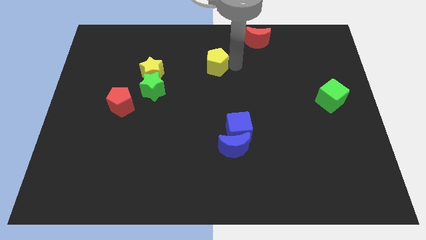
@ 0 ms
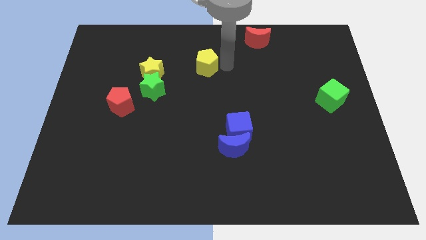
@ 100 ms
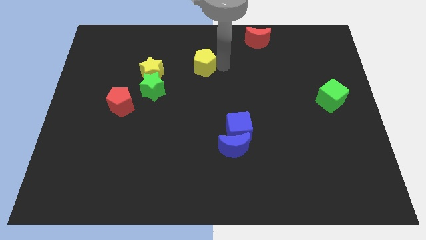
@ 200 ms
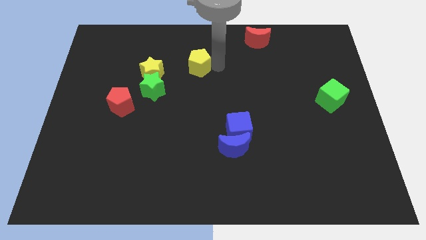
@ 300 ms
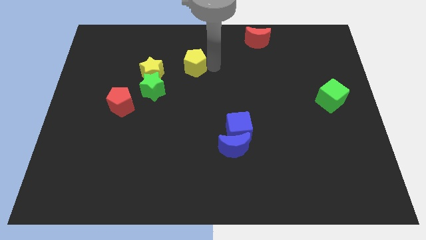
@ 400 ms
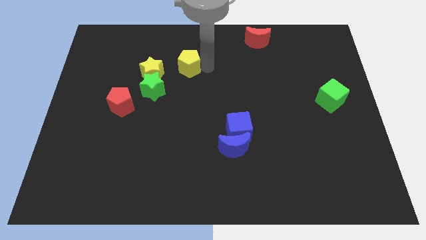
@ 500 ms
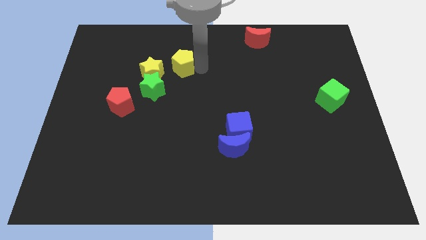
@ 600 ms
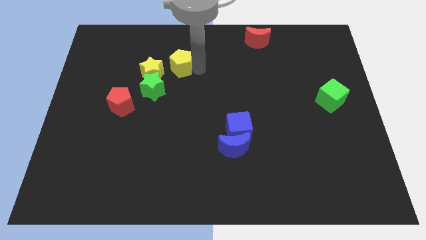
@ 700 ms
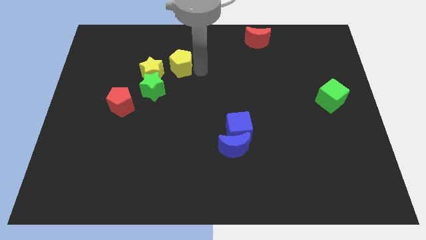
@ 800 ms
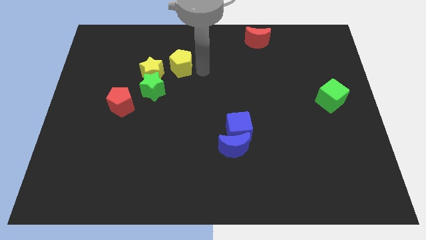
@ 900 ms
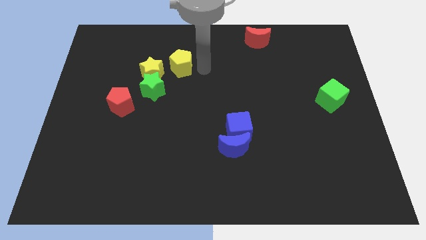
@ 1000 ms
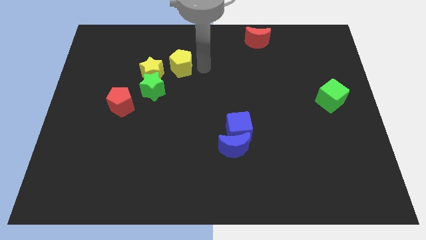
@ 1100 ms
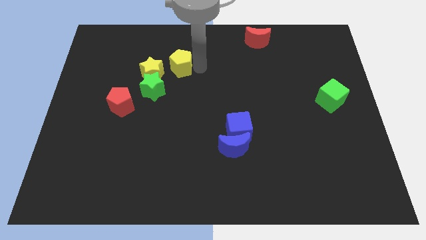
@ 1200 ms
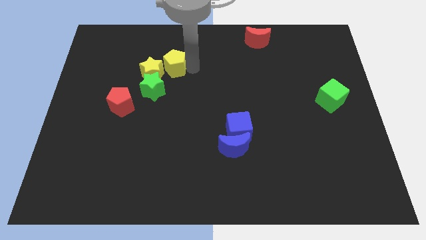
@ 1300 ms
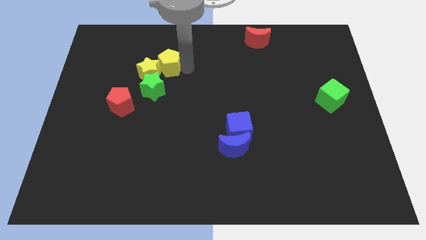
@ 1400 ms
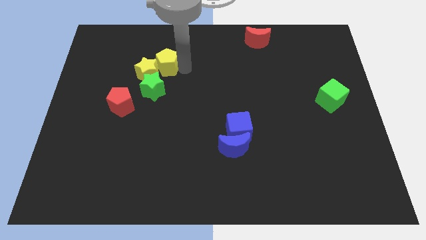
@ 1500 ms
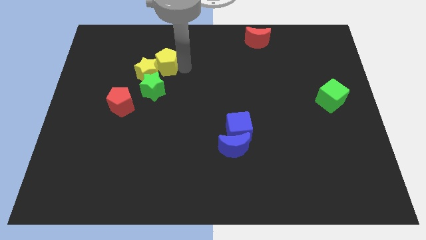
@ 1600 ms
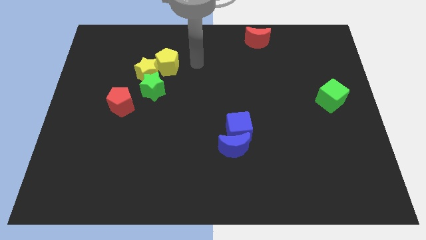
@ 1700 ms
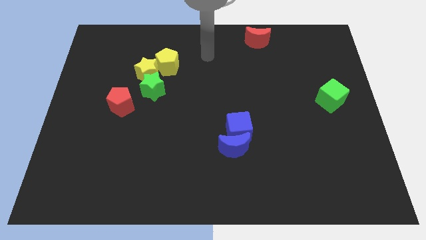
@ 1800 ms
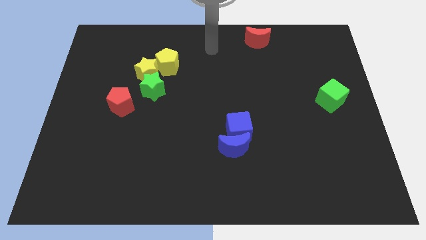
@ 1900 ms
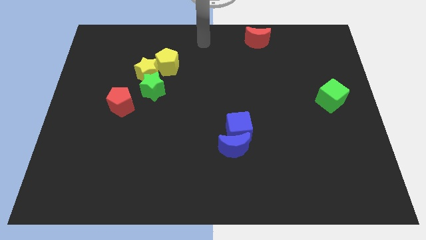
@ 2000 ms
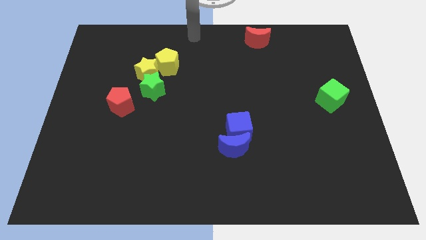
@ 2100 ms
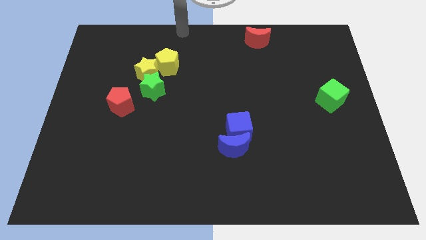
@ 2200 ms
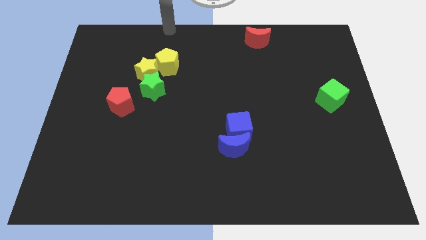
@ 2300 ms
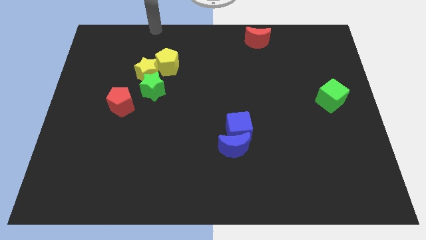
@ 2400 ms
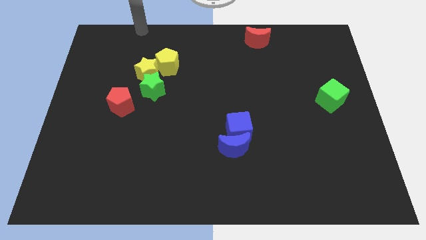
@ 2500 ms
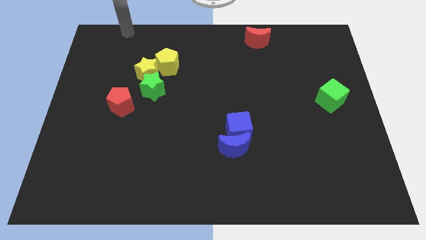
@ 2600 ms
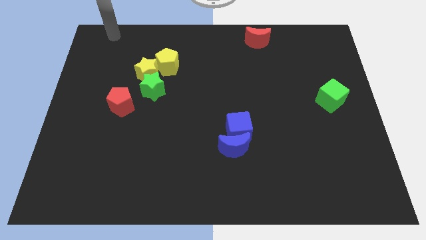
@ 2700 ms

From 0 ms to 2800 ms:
slightly push the yellow pentagon to the yellow star

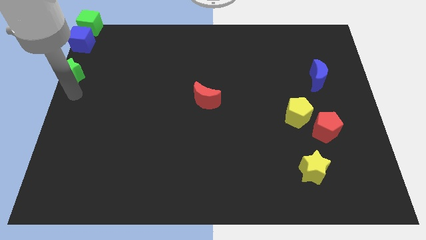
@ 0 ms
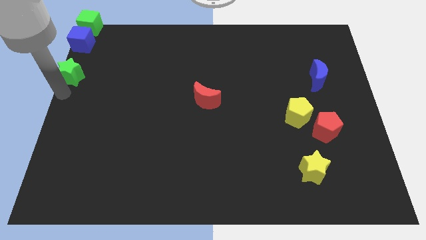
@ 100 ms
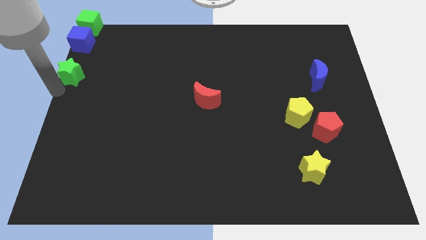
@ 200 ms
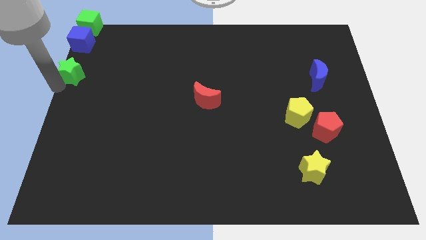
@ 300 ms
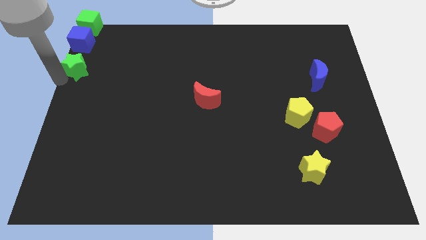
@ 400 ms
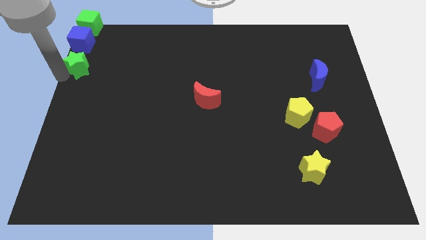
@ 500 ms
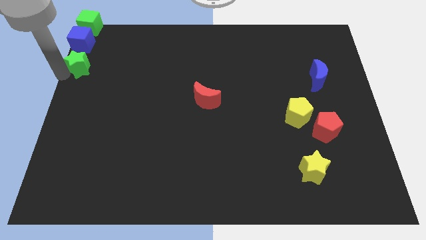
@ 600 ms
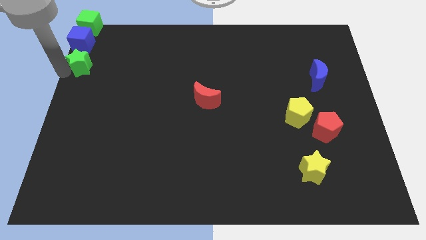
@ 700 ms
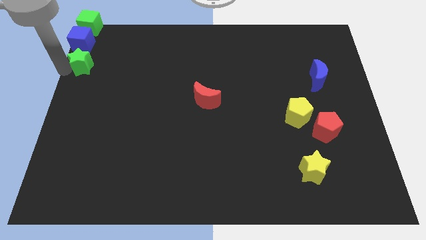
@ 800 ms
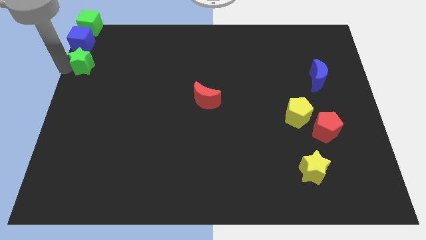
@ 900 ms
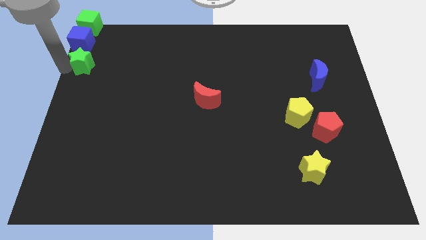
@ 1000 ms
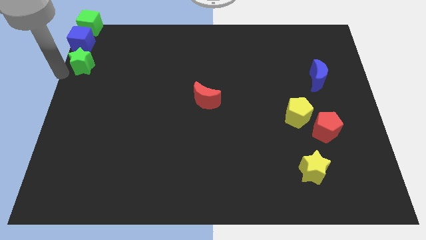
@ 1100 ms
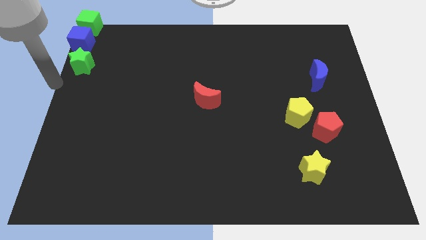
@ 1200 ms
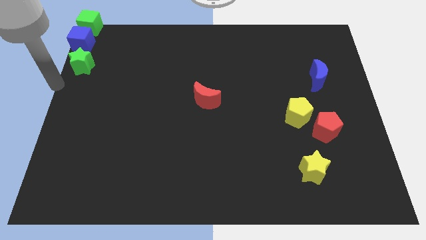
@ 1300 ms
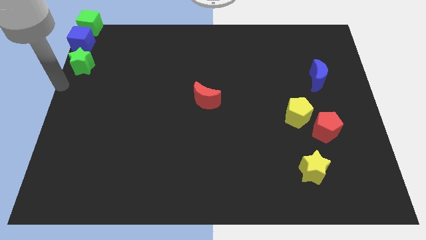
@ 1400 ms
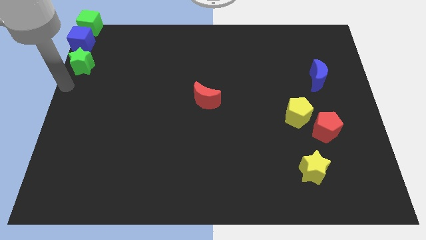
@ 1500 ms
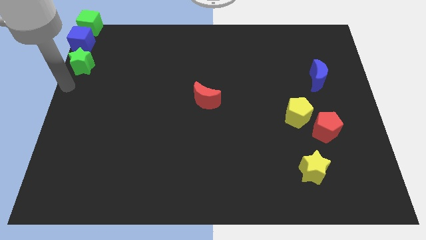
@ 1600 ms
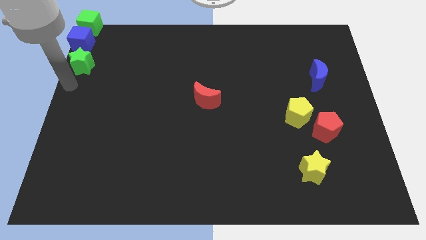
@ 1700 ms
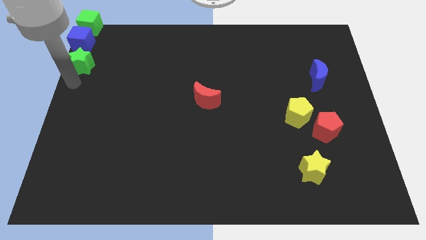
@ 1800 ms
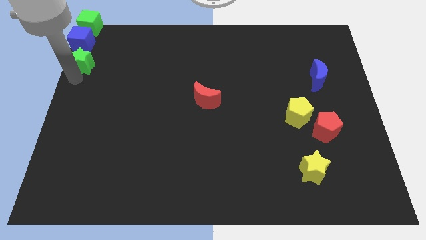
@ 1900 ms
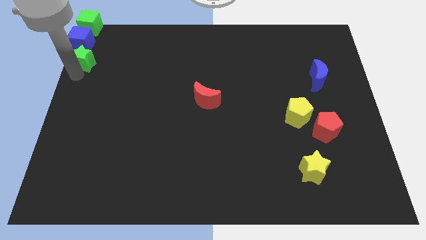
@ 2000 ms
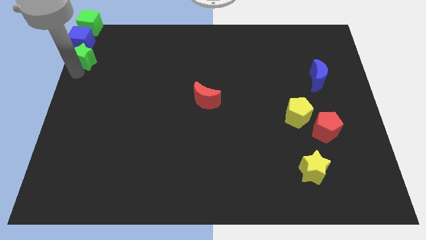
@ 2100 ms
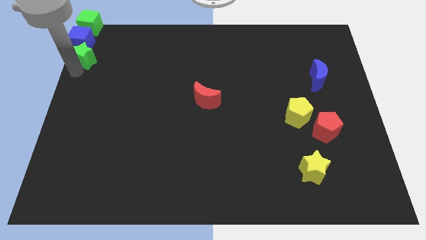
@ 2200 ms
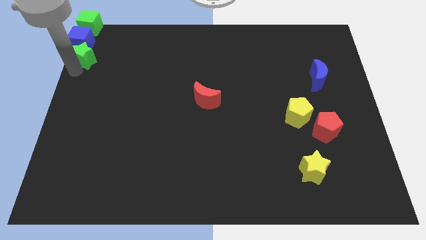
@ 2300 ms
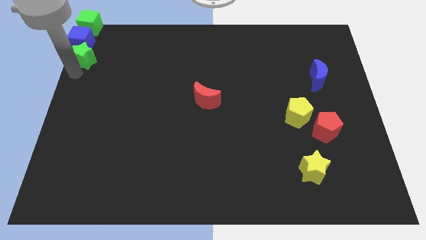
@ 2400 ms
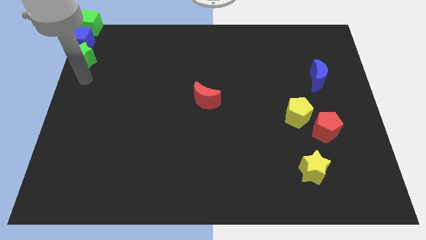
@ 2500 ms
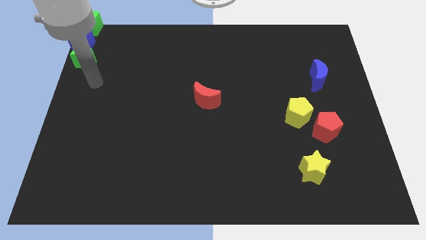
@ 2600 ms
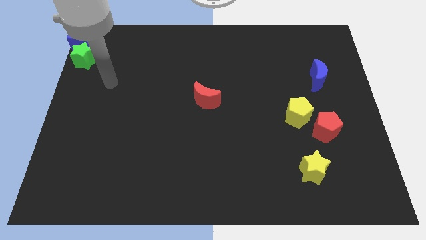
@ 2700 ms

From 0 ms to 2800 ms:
push the green star into the blue cube

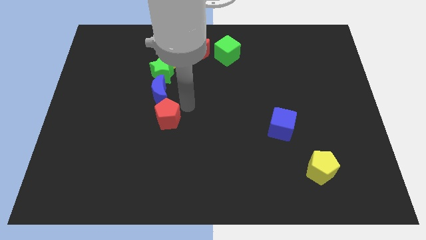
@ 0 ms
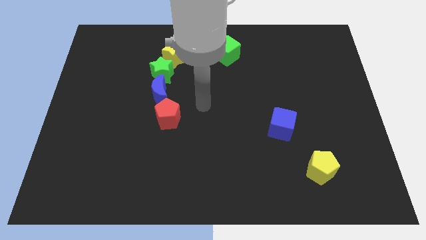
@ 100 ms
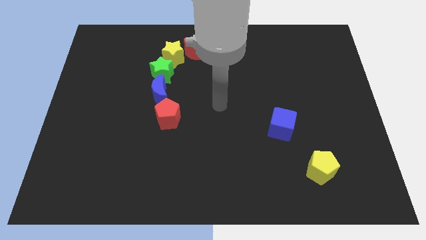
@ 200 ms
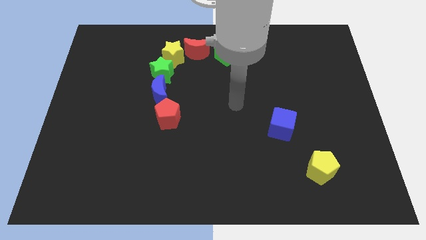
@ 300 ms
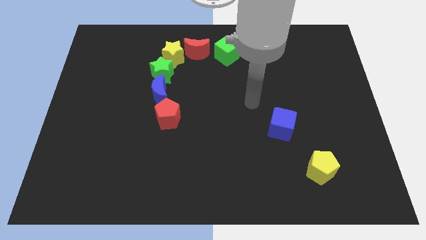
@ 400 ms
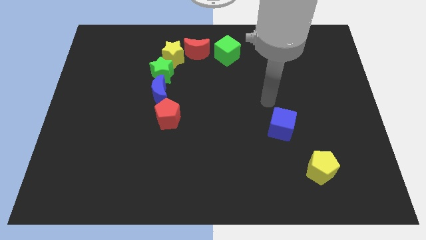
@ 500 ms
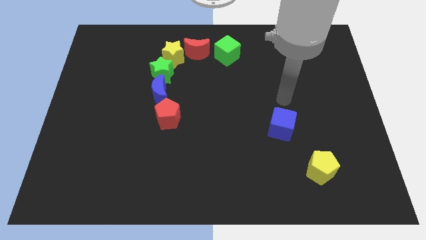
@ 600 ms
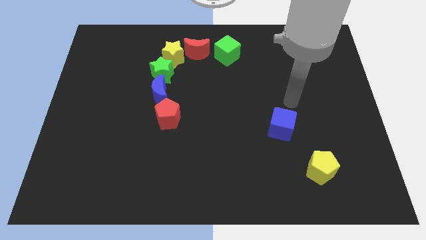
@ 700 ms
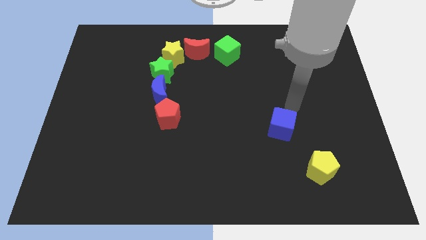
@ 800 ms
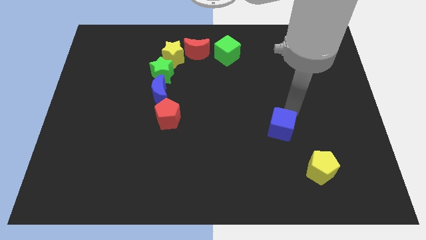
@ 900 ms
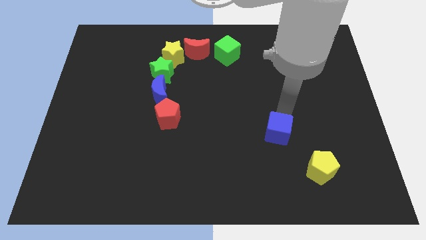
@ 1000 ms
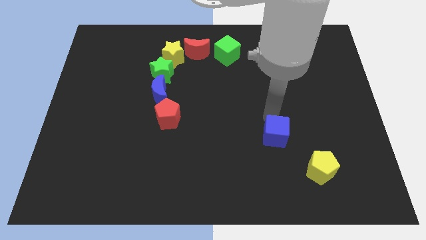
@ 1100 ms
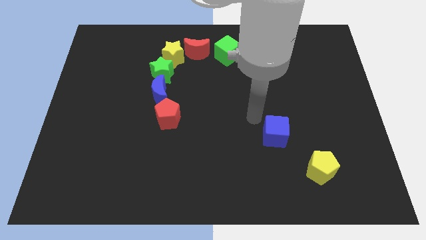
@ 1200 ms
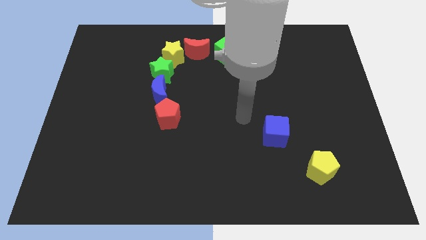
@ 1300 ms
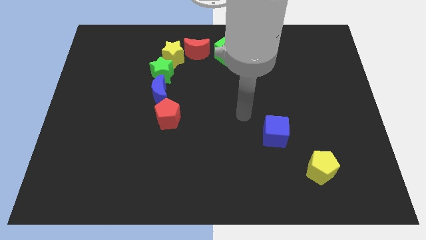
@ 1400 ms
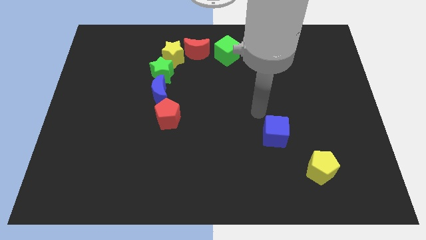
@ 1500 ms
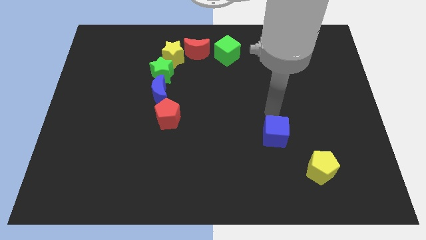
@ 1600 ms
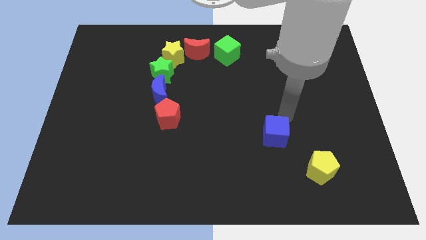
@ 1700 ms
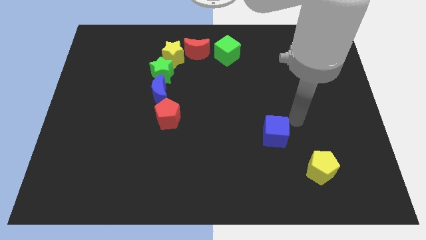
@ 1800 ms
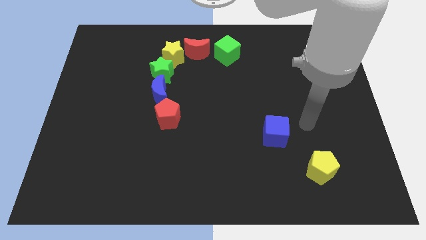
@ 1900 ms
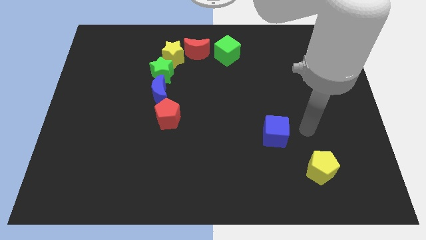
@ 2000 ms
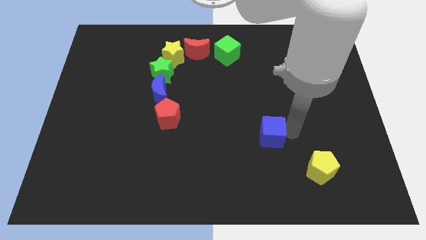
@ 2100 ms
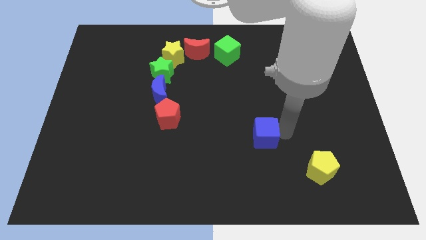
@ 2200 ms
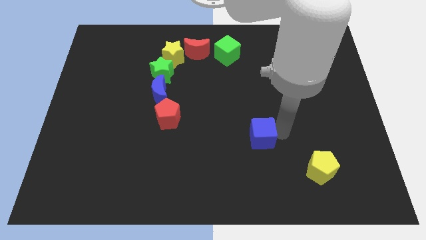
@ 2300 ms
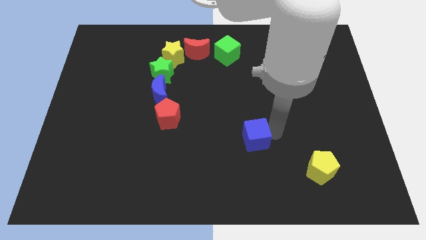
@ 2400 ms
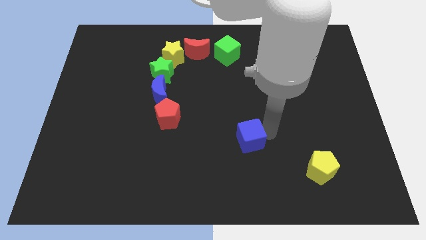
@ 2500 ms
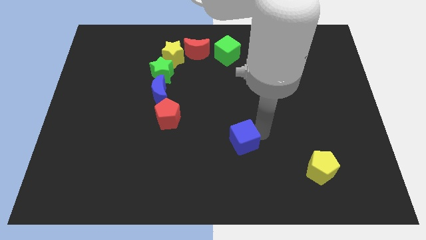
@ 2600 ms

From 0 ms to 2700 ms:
slightly push the blue cube towards the left

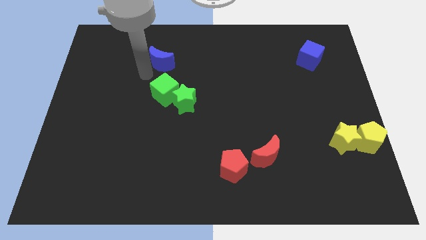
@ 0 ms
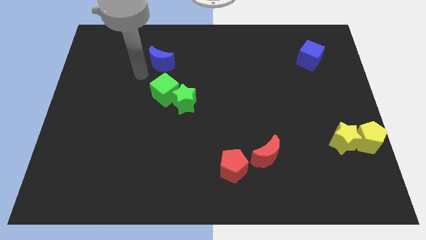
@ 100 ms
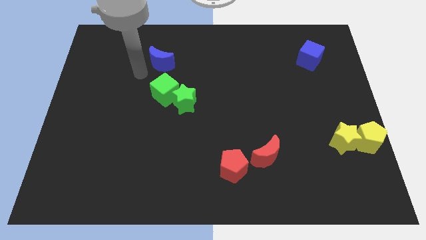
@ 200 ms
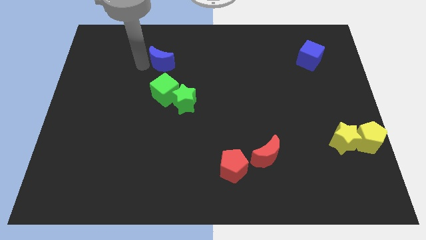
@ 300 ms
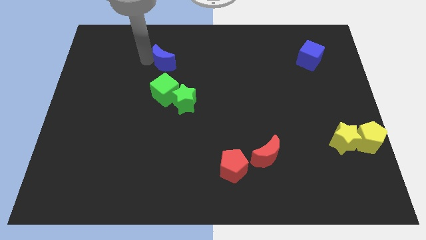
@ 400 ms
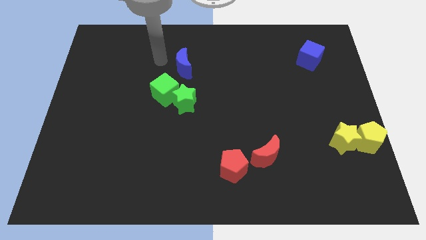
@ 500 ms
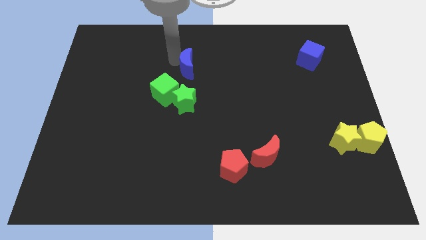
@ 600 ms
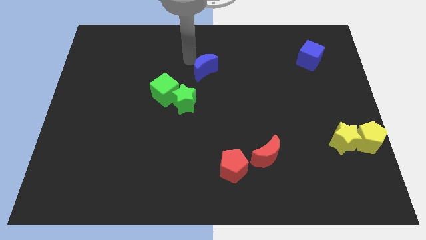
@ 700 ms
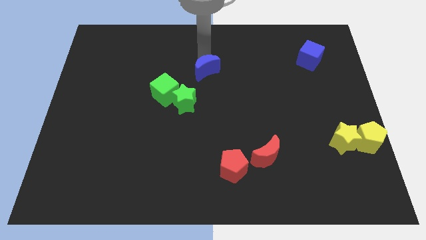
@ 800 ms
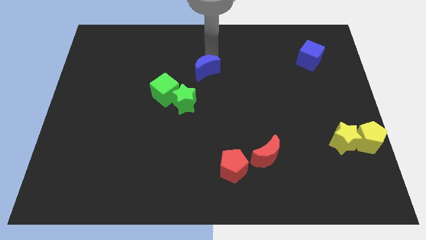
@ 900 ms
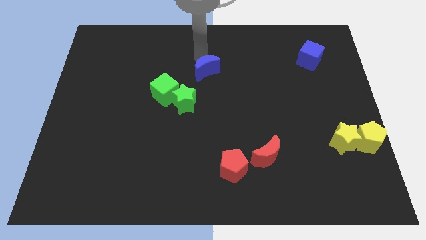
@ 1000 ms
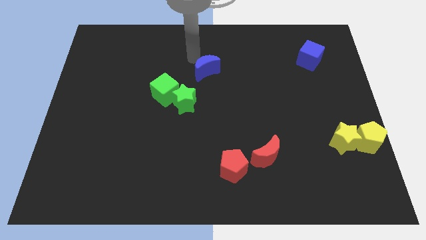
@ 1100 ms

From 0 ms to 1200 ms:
slightly push the blue crescent towards the right side of the board
